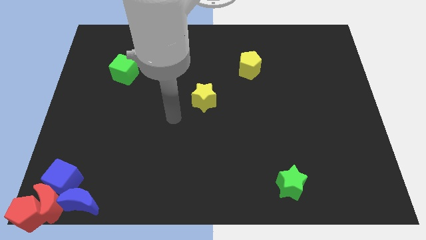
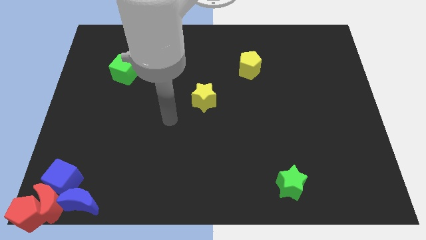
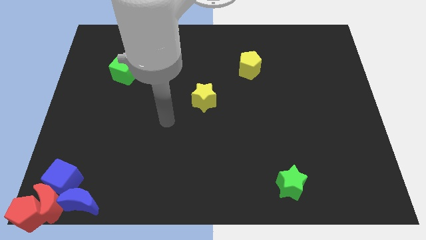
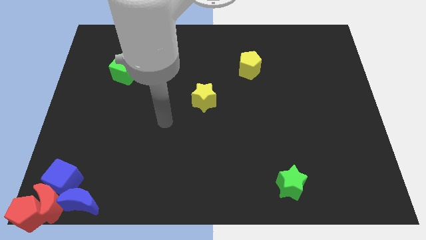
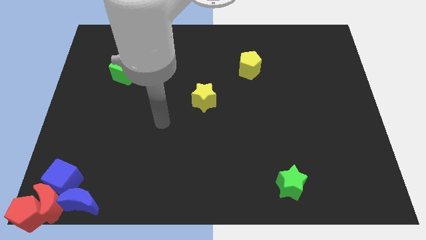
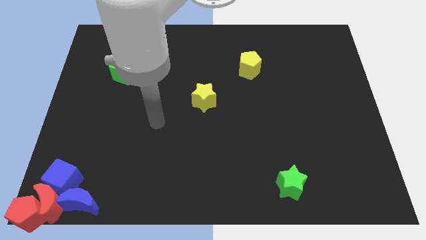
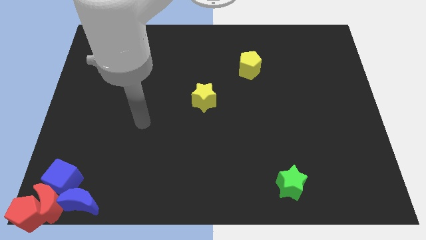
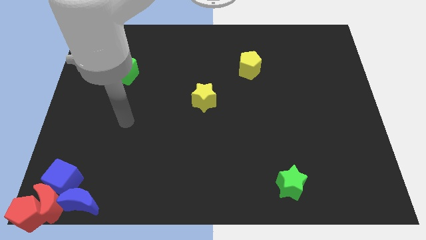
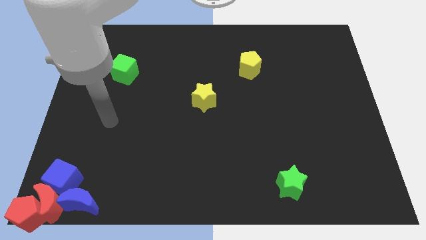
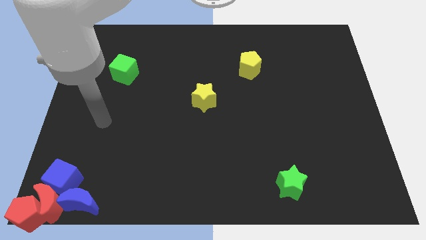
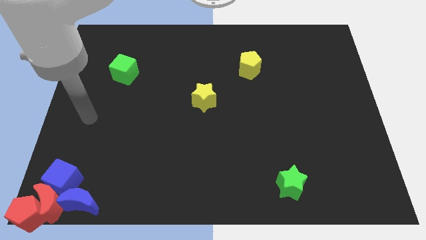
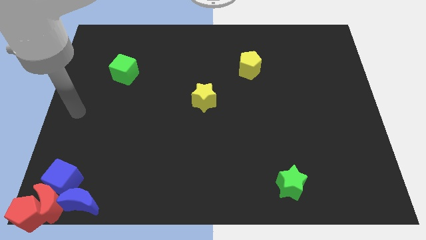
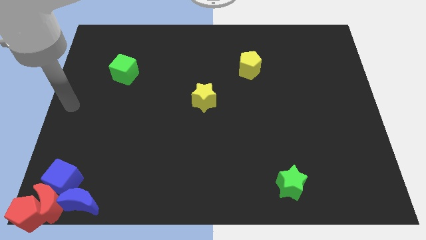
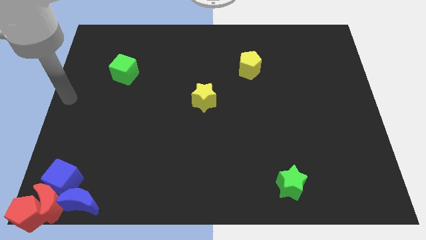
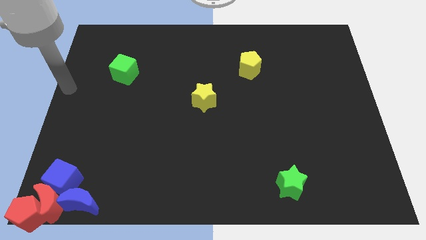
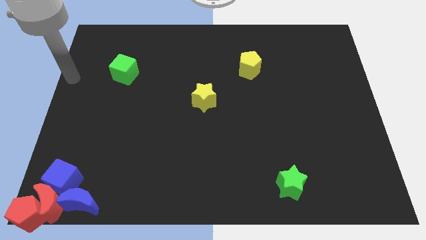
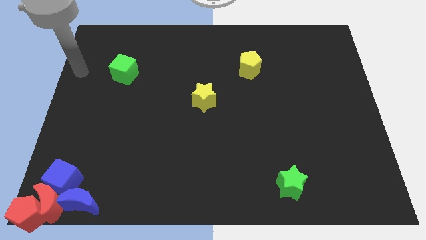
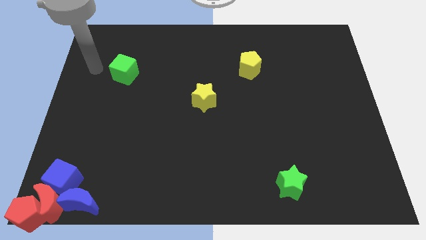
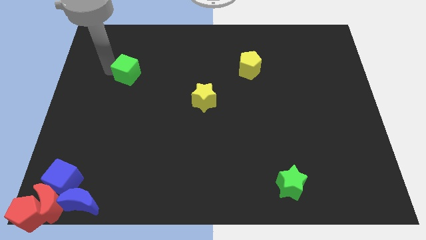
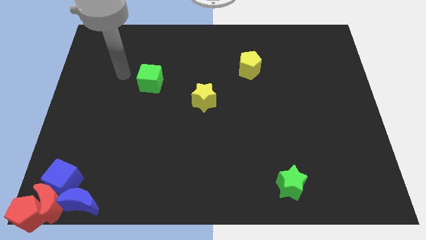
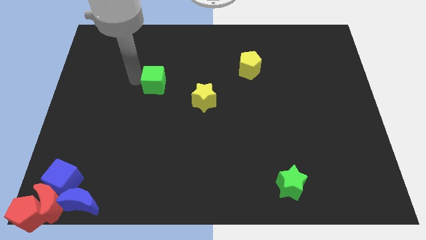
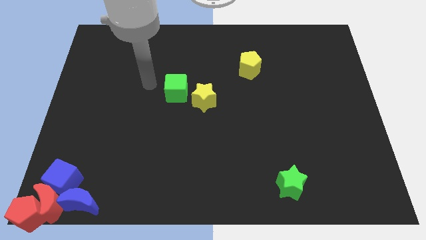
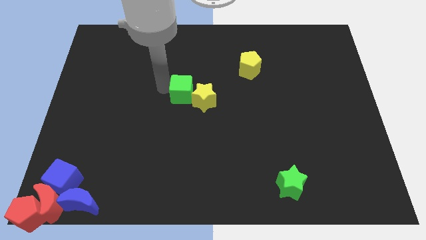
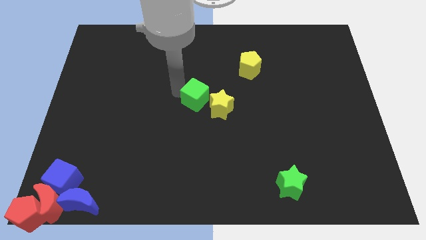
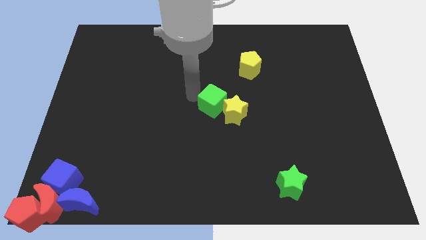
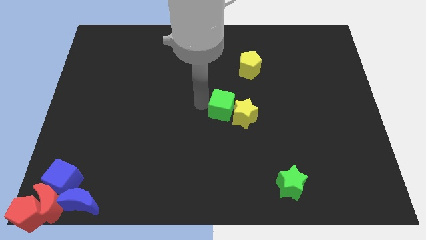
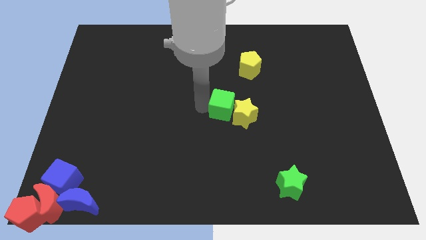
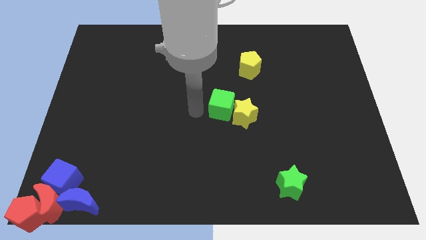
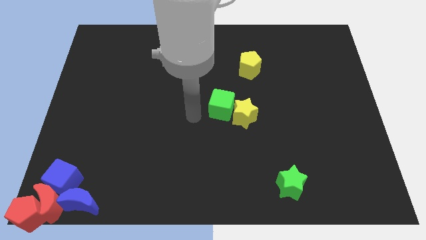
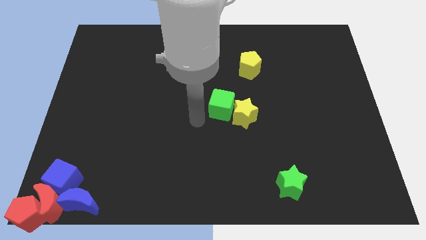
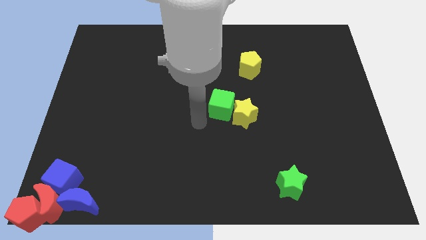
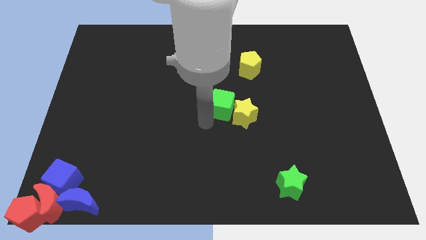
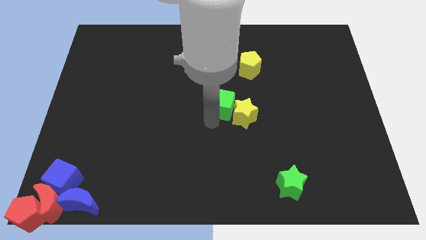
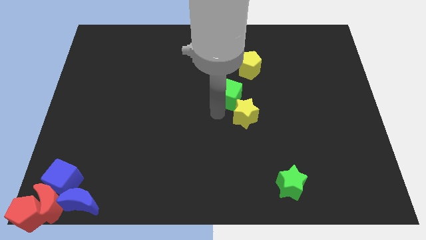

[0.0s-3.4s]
move the green cube into the yellow star

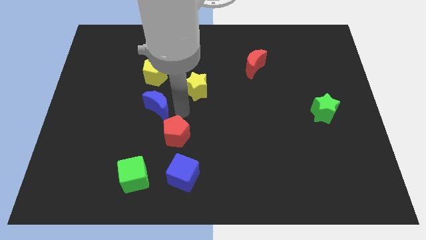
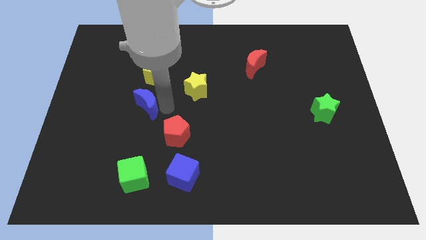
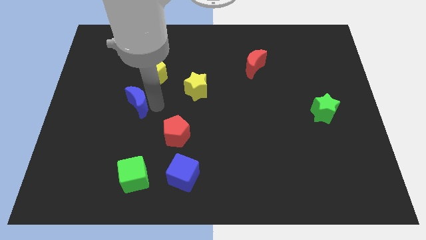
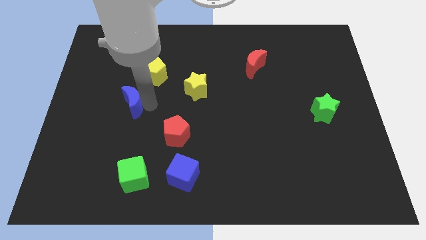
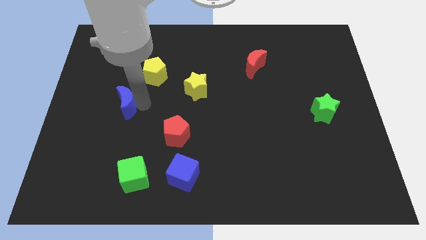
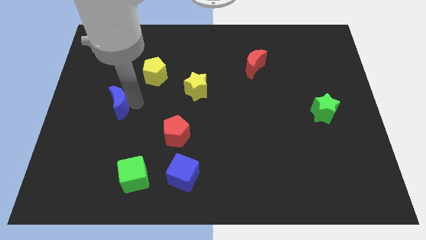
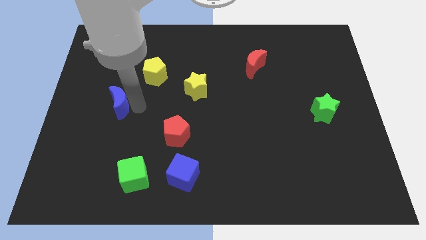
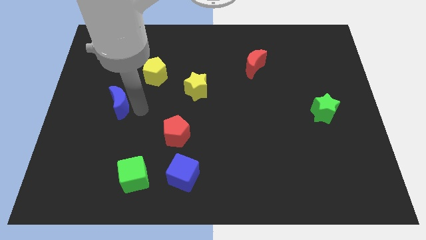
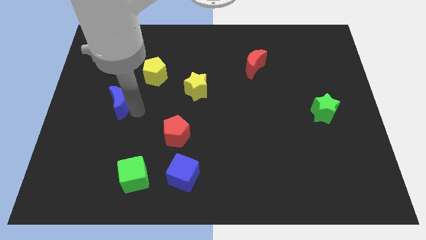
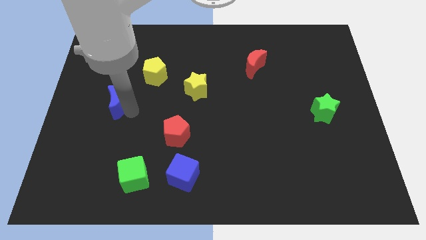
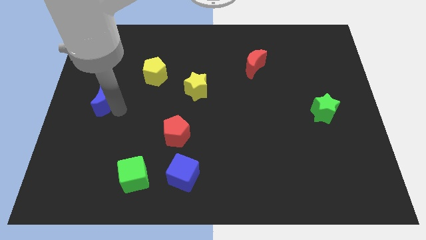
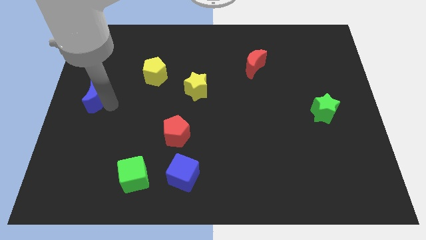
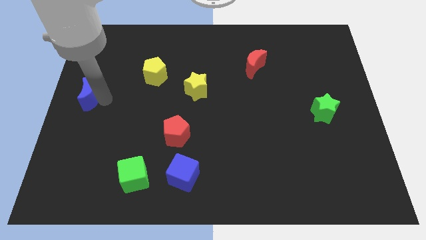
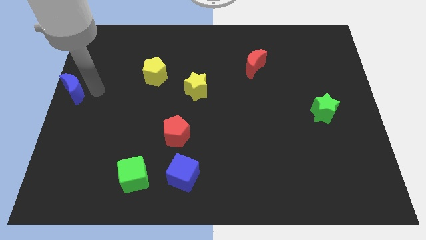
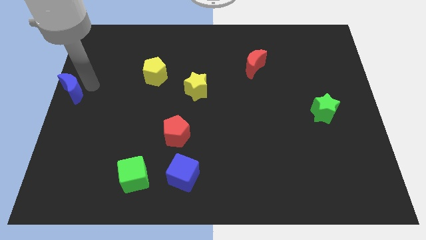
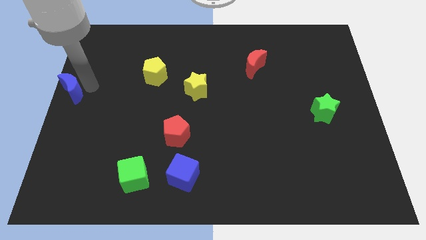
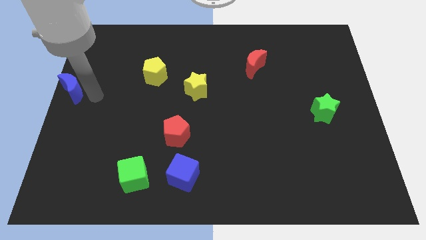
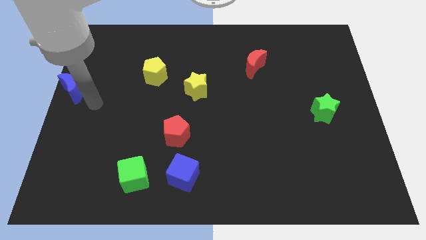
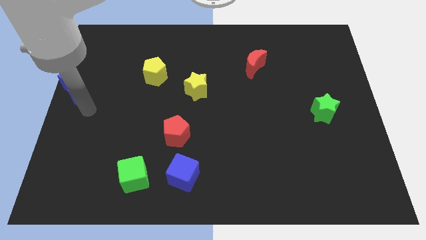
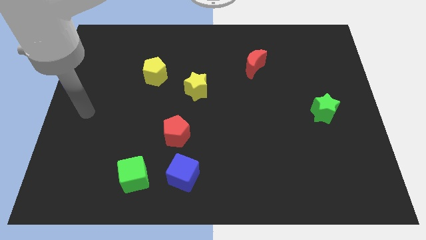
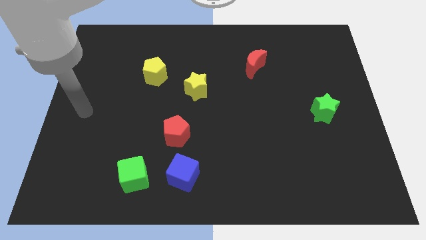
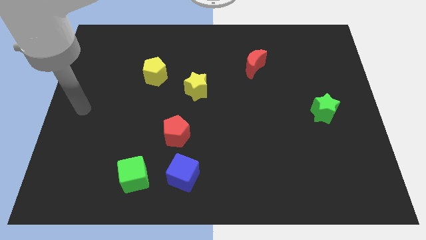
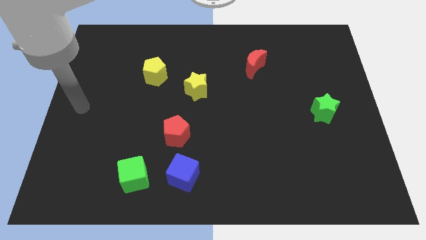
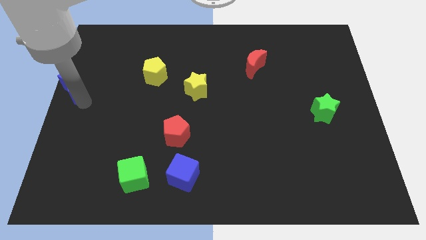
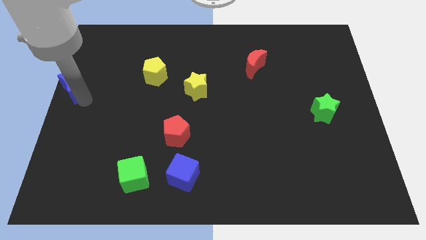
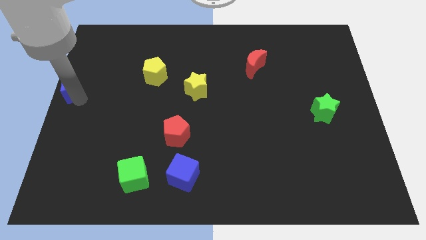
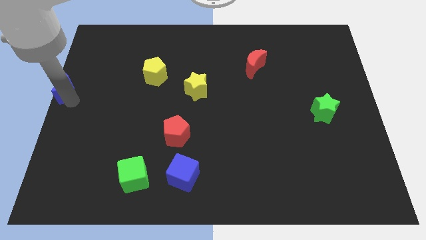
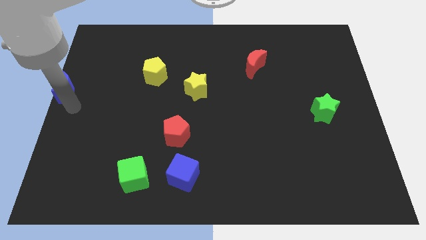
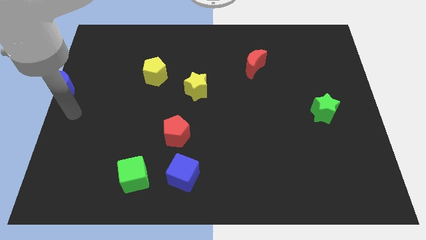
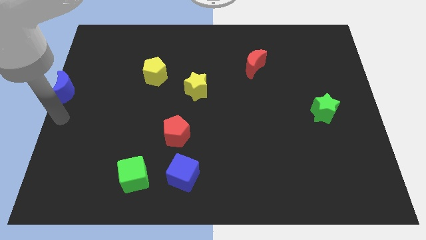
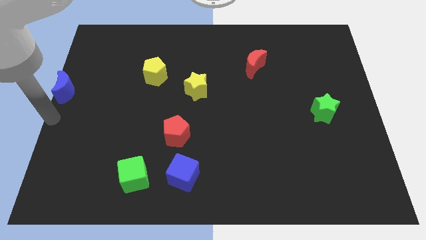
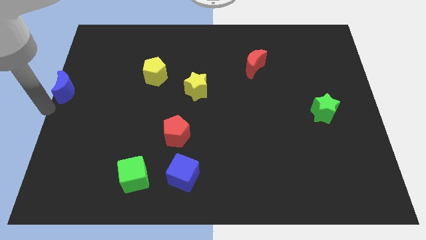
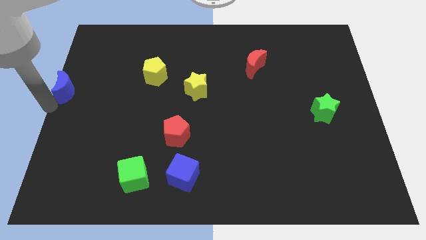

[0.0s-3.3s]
put the blue moon at the center left corner

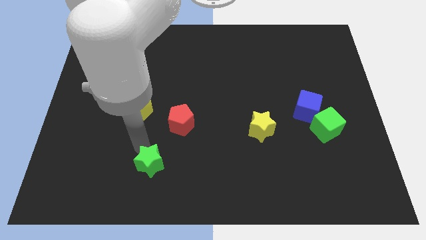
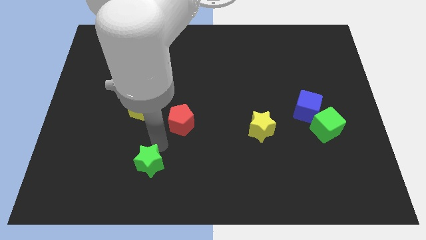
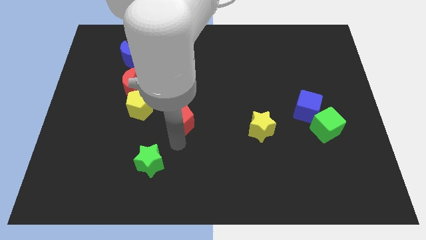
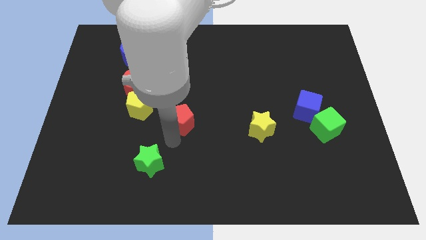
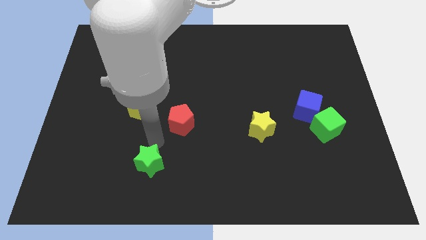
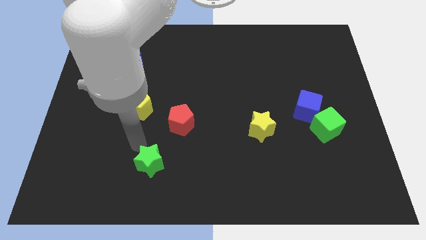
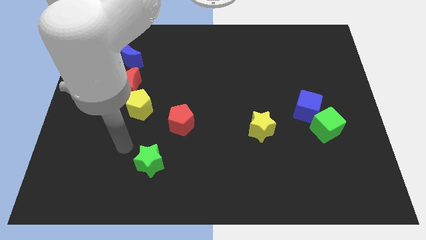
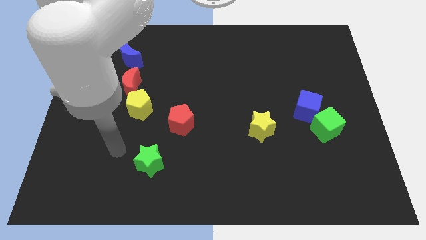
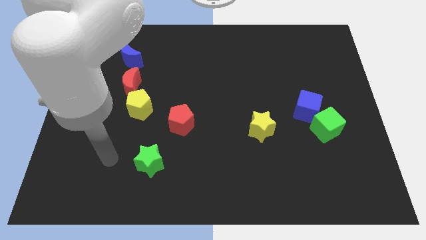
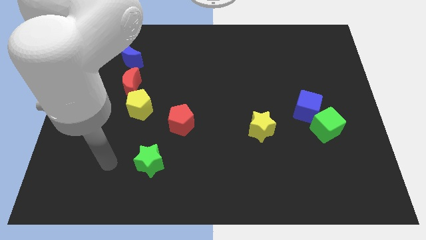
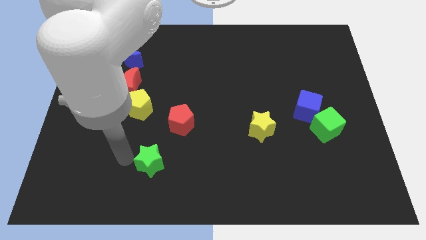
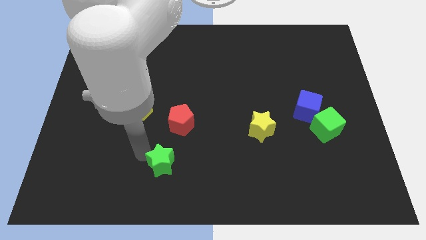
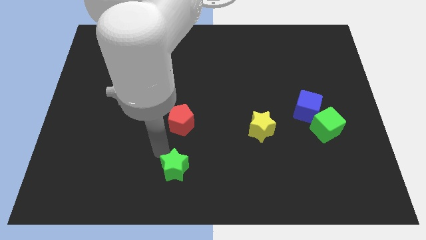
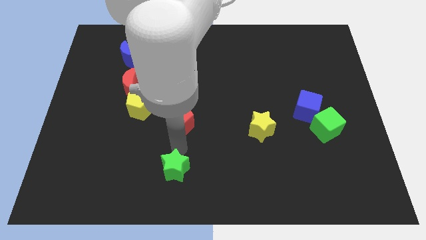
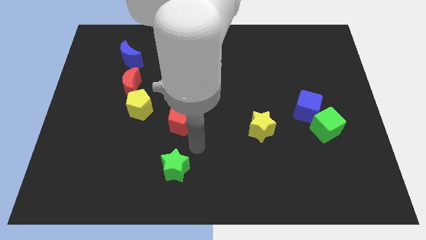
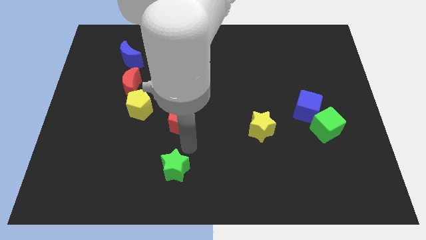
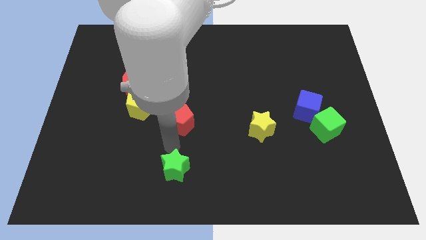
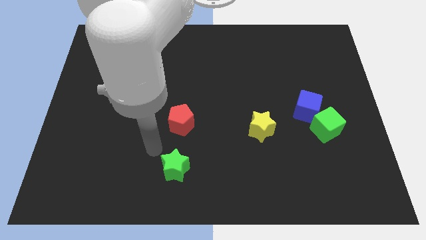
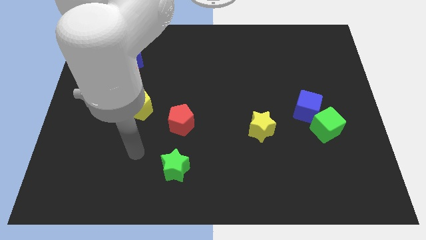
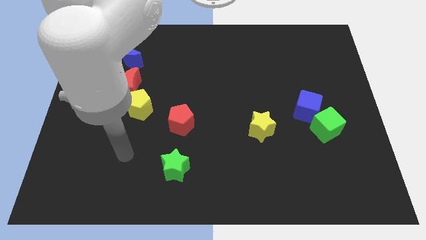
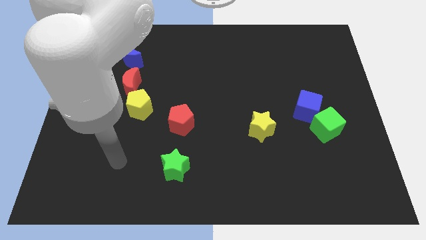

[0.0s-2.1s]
push green star below the red pentagon

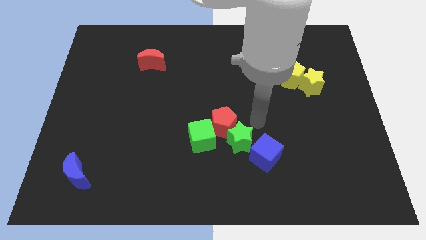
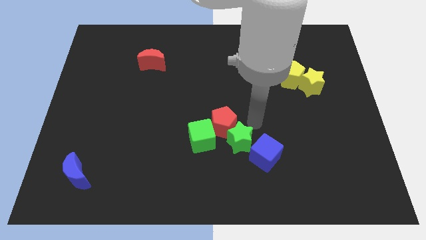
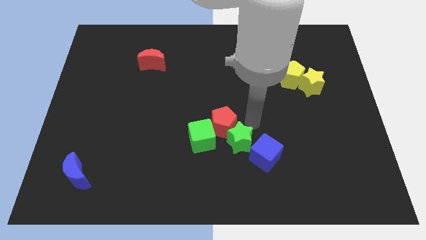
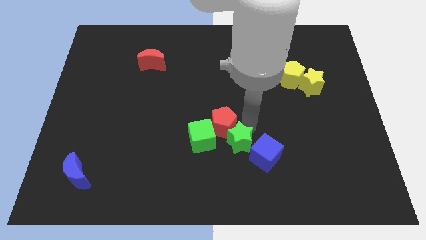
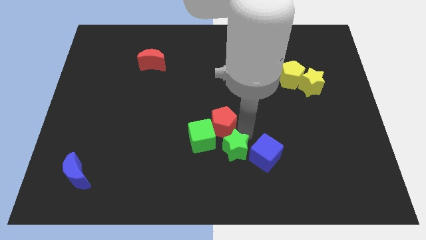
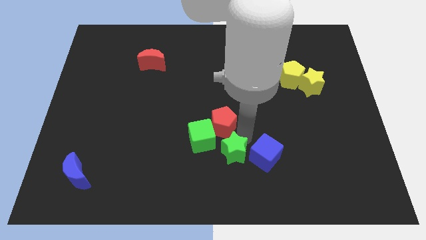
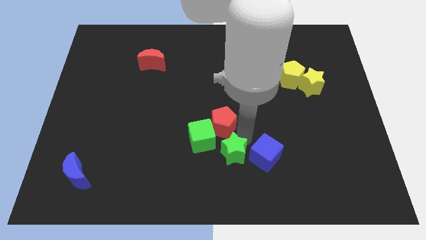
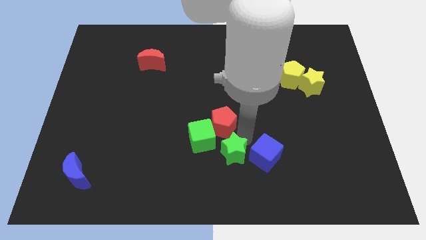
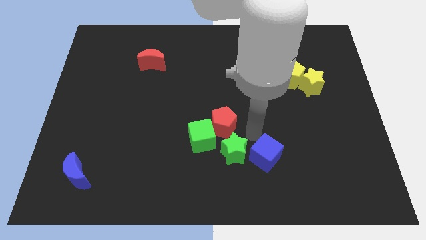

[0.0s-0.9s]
put the green star to the left side of blue cube
